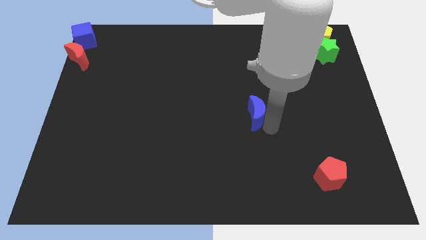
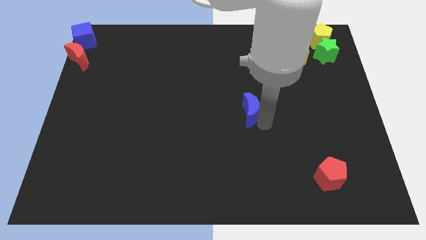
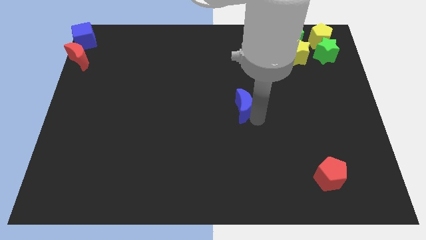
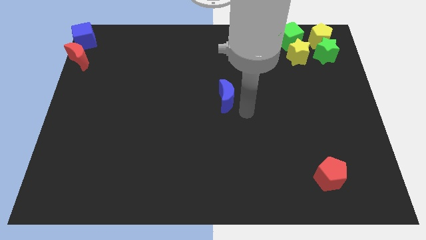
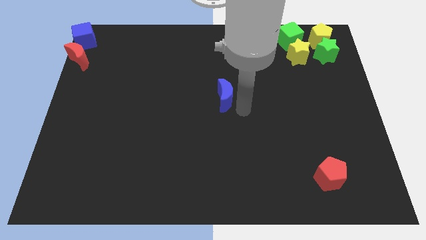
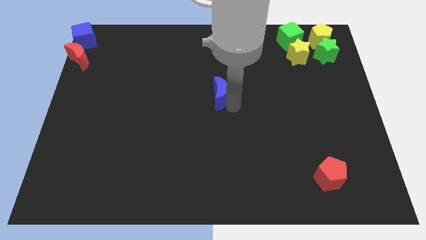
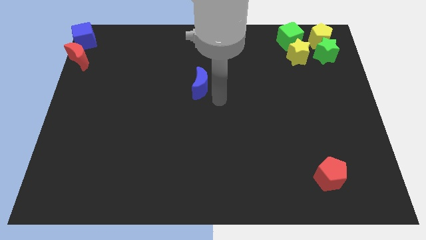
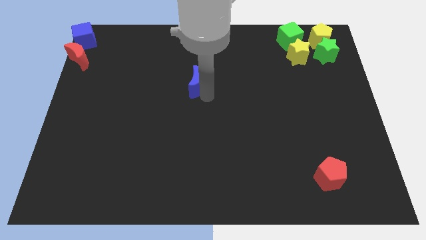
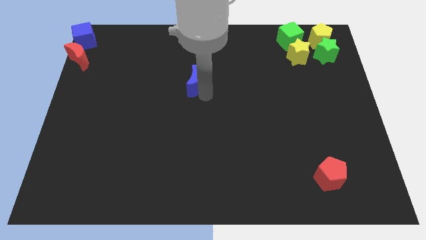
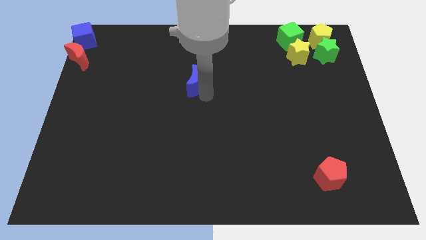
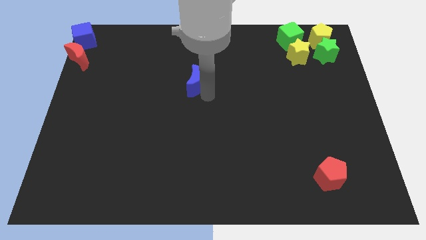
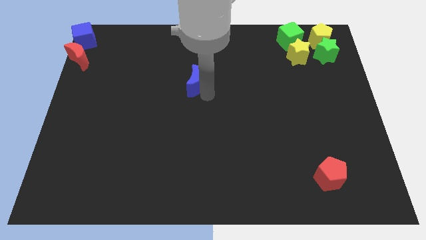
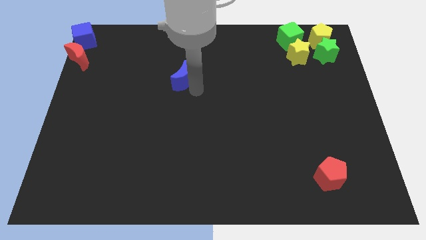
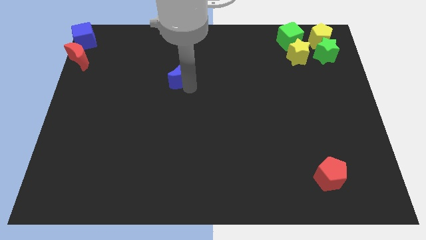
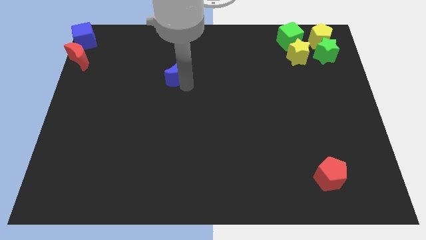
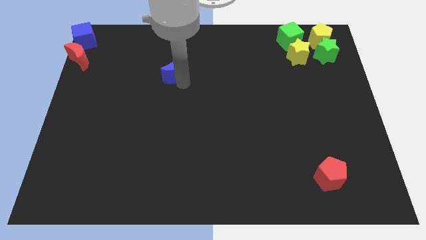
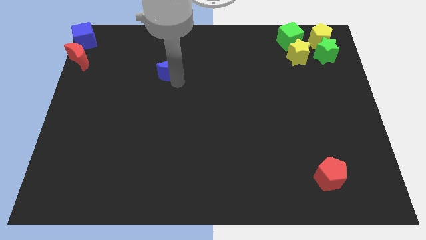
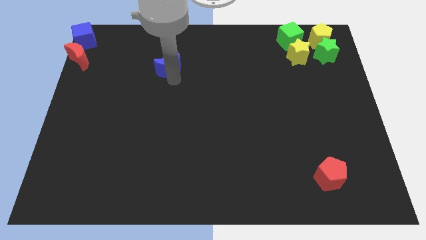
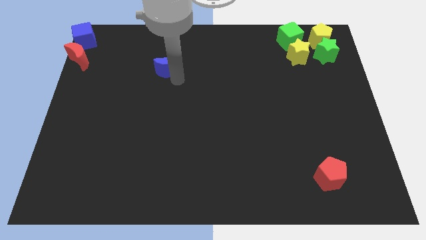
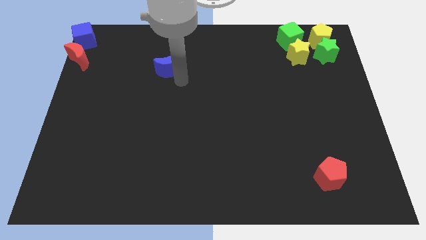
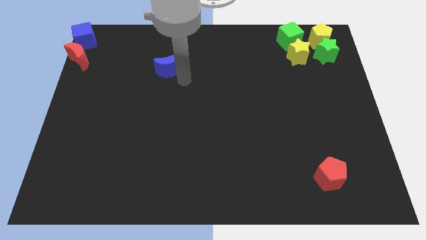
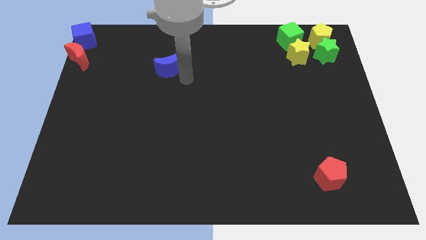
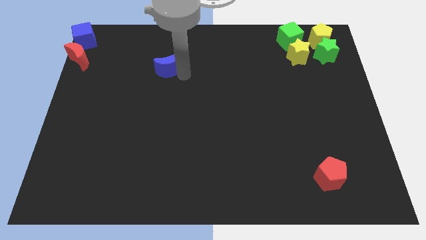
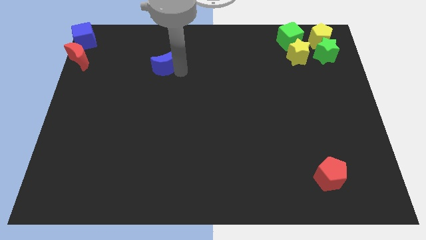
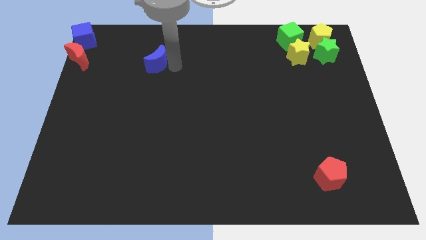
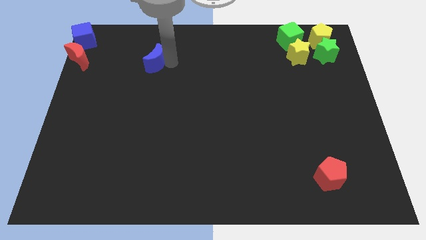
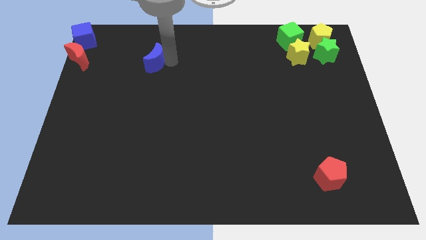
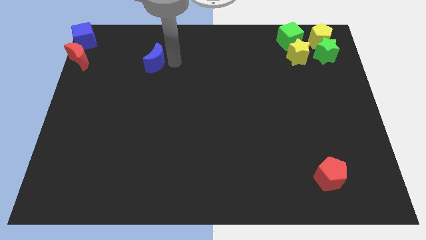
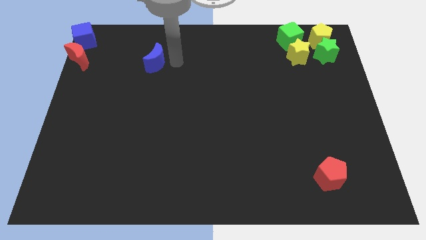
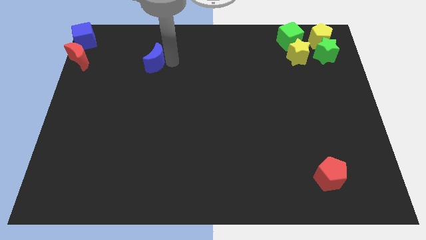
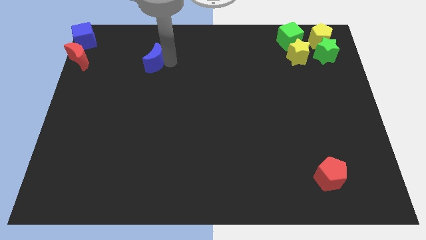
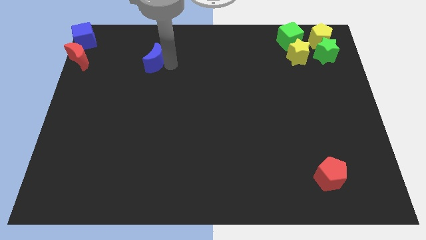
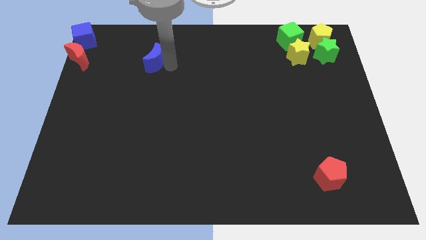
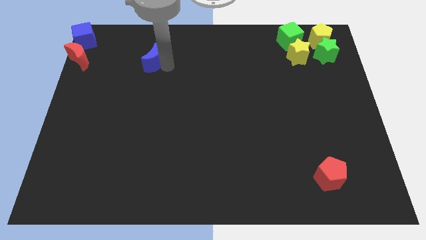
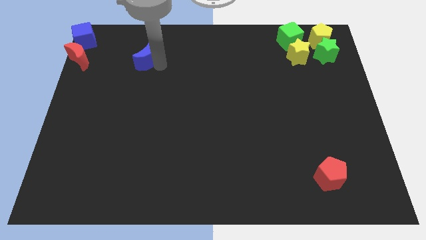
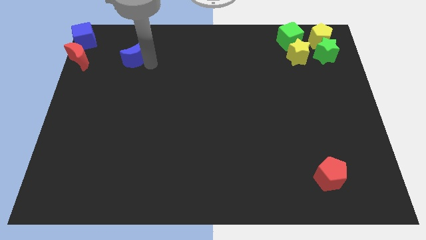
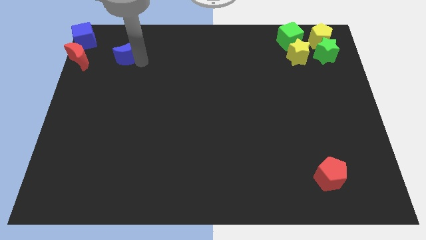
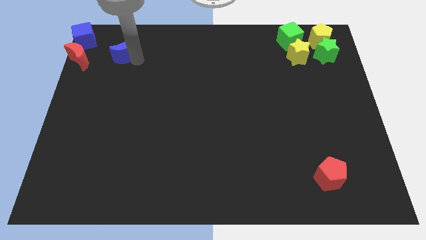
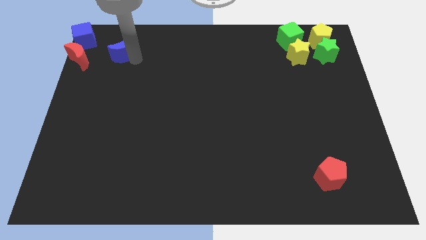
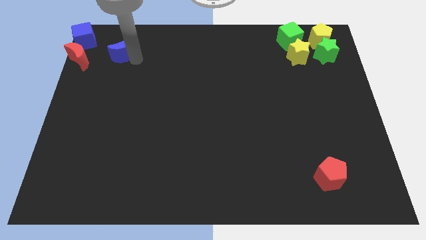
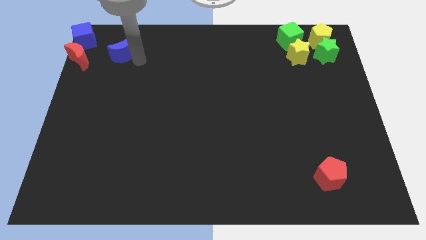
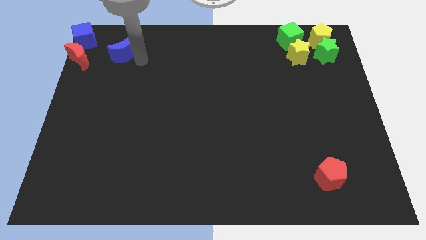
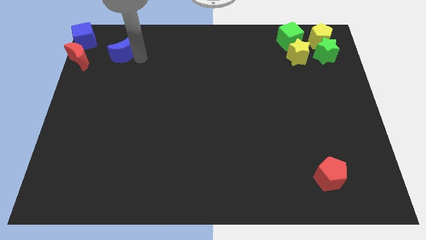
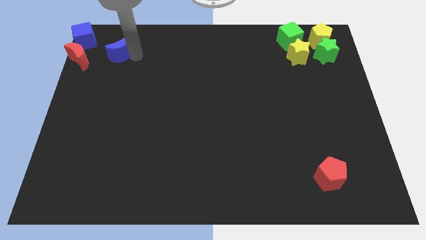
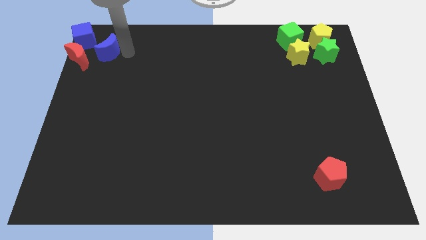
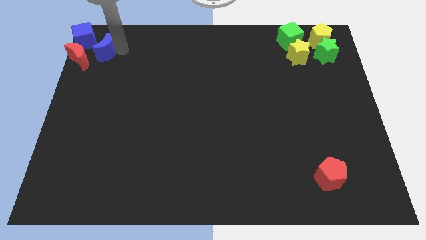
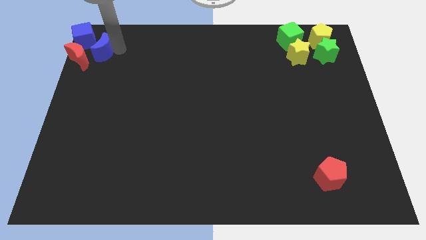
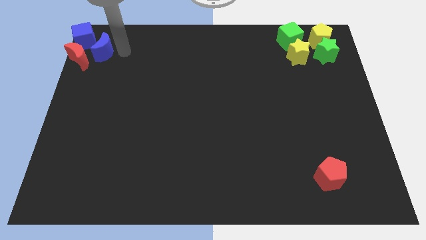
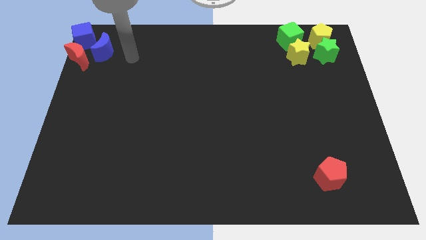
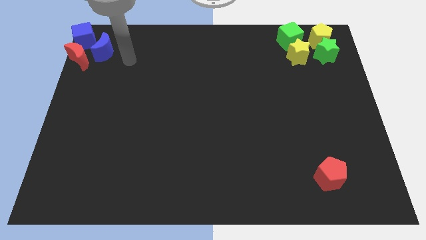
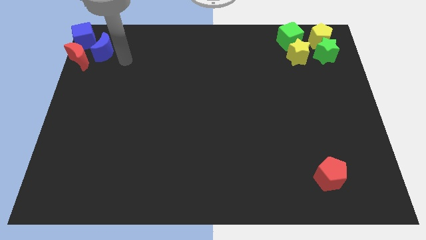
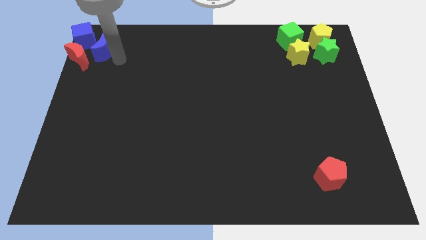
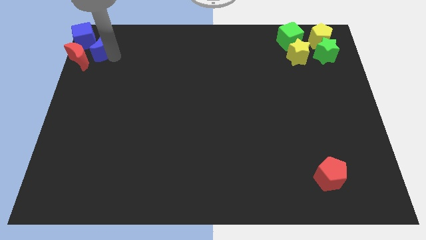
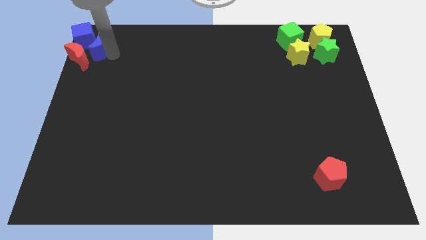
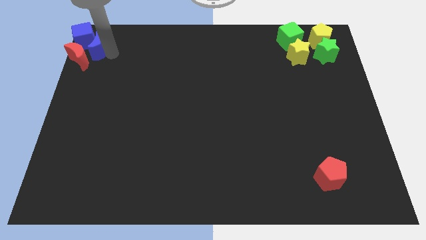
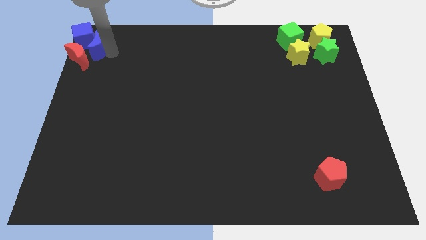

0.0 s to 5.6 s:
move the blue crescent into the blue cube

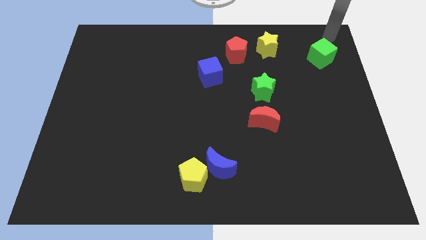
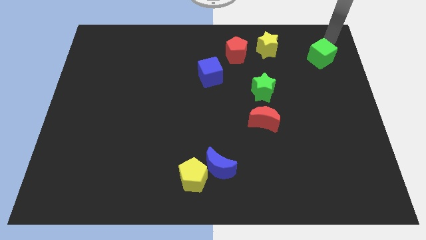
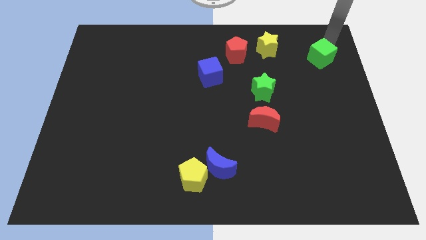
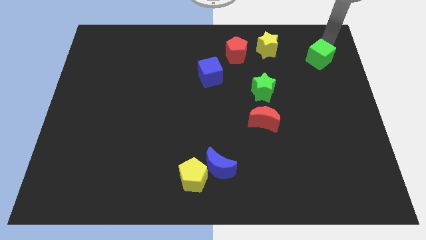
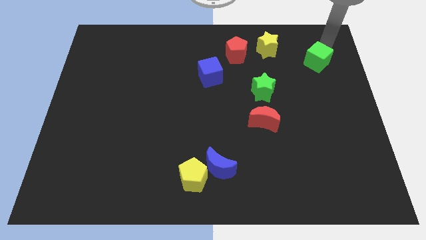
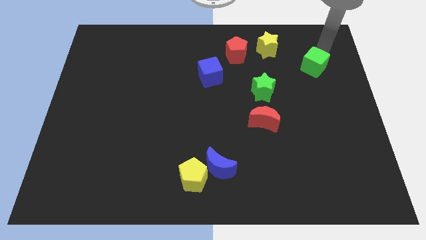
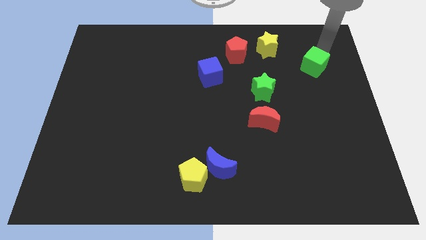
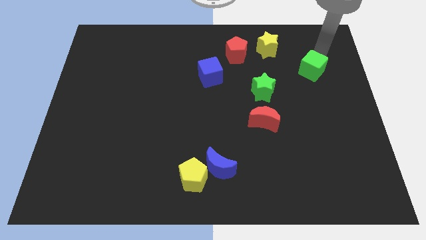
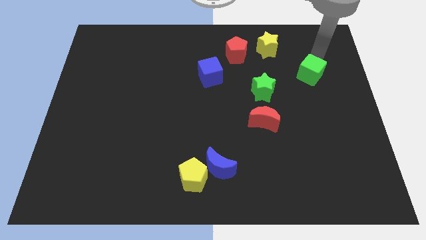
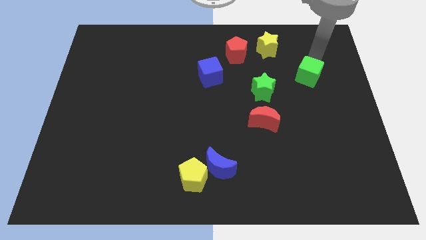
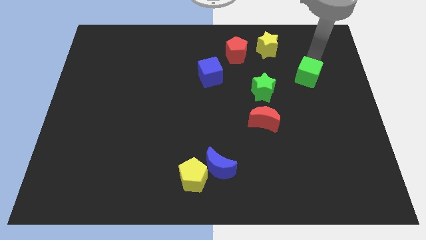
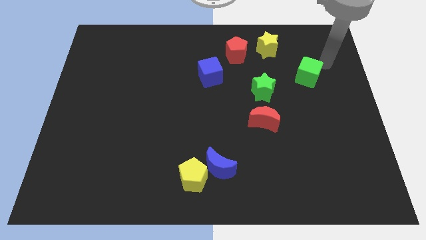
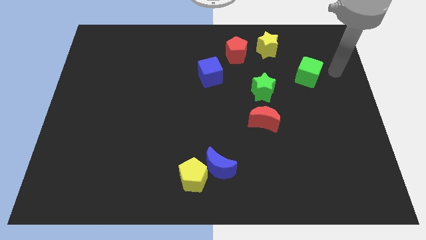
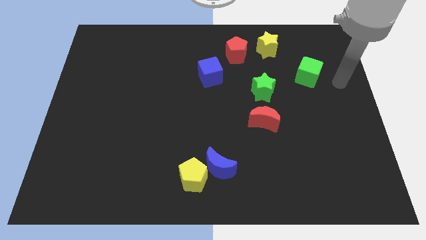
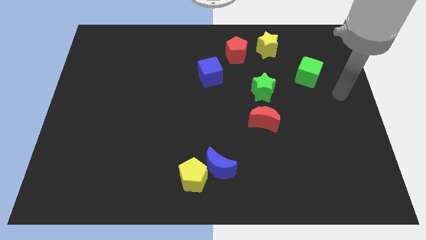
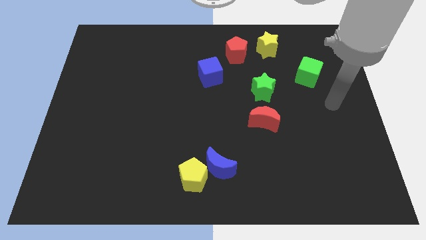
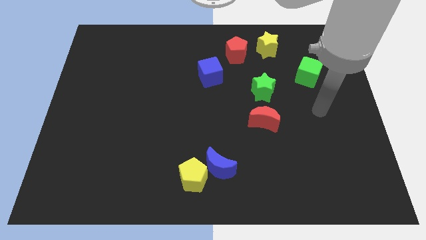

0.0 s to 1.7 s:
push the green cube towards the green star

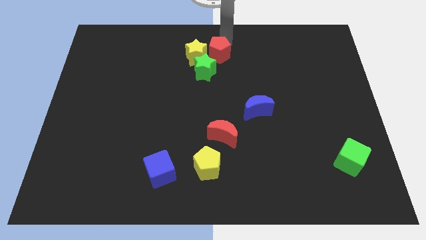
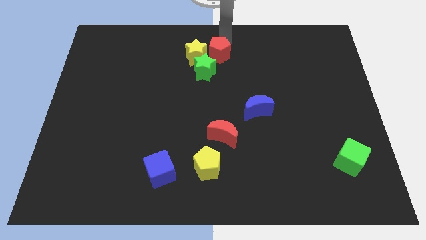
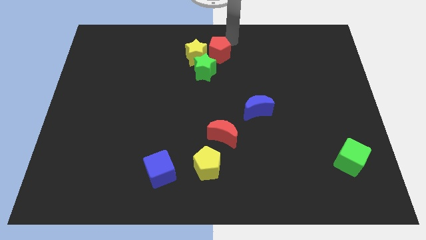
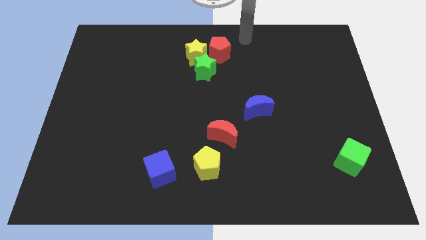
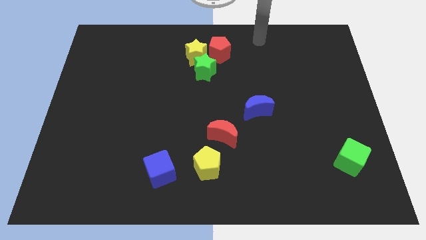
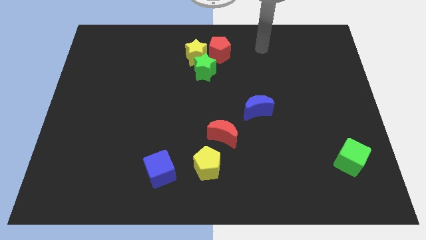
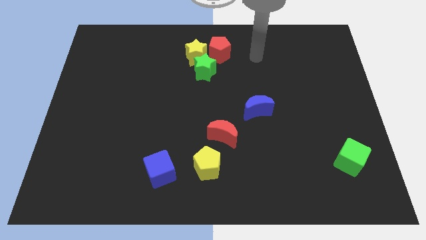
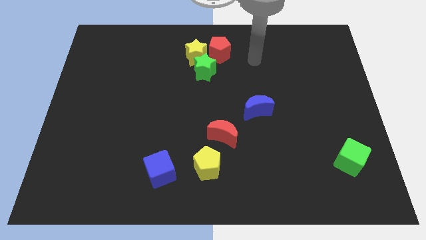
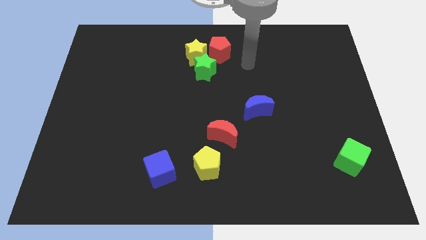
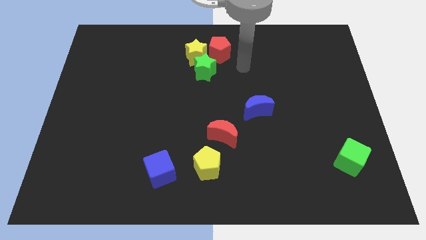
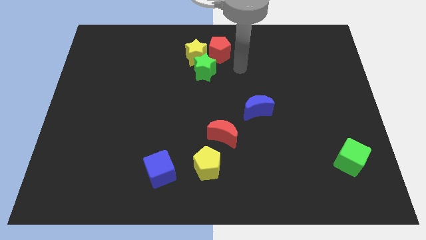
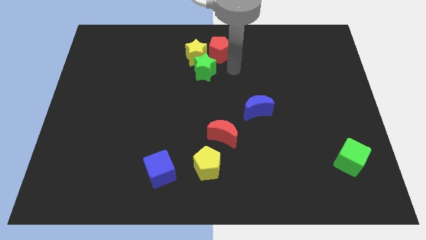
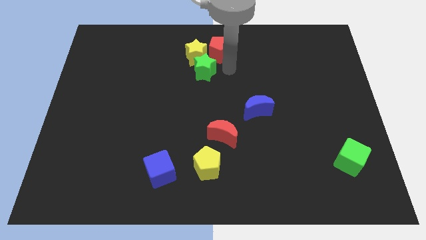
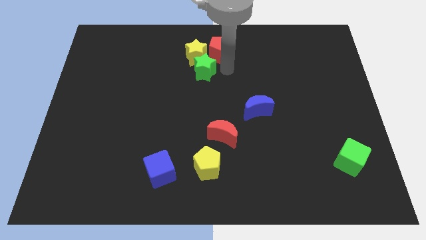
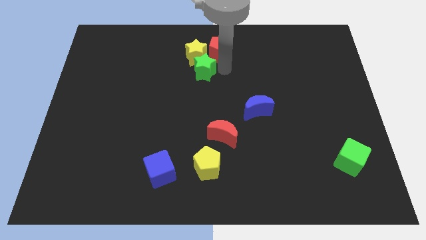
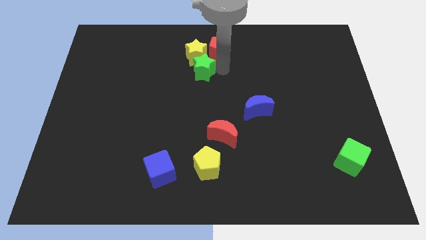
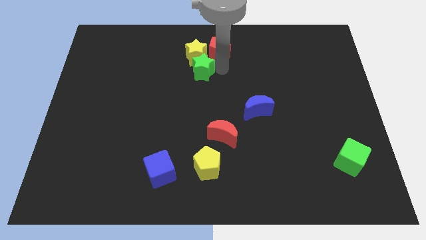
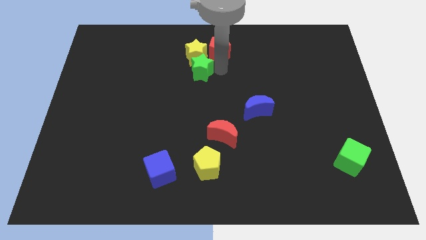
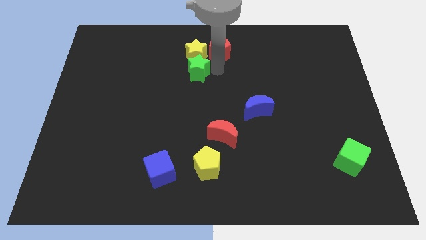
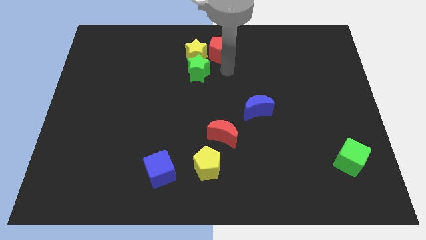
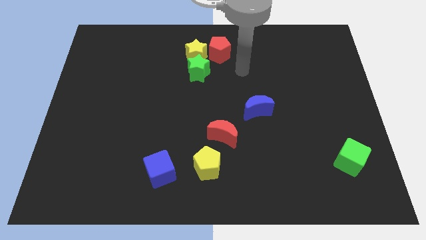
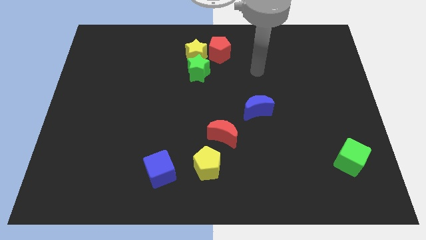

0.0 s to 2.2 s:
place the red pentagon diagonally to blue crescent
